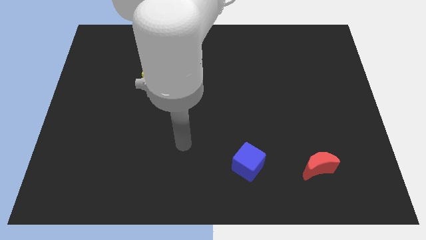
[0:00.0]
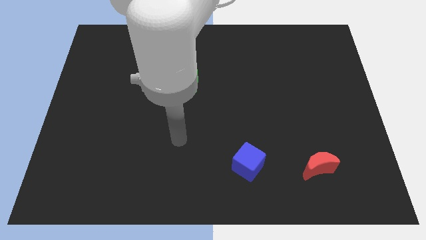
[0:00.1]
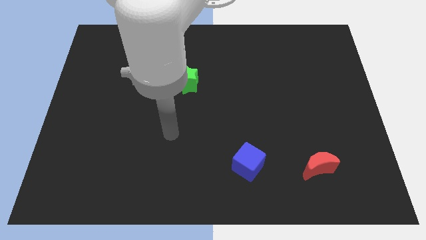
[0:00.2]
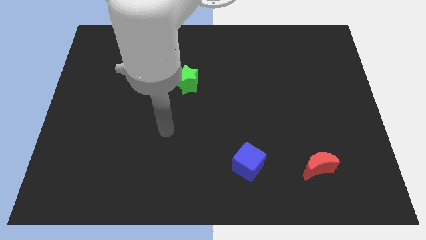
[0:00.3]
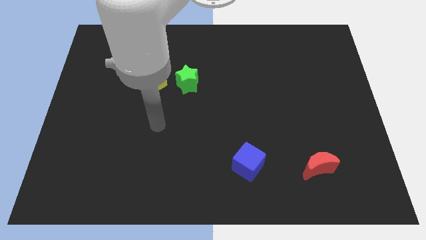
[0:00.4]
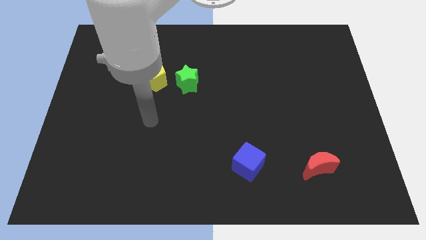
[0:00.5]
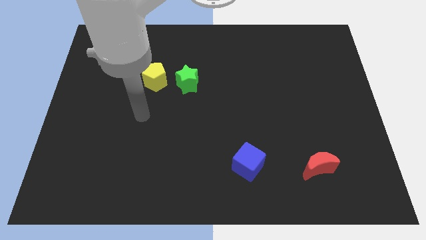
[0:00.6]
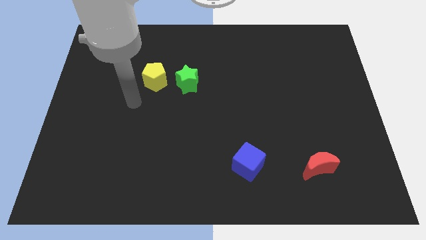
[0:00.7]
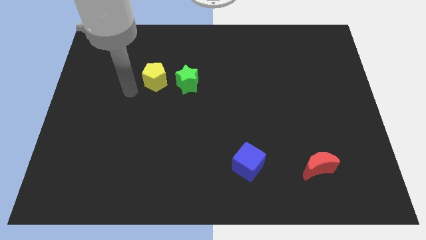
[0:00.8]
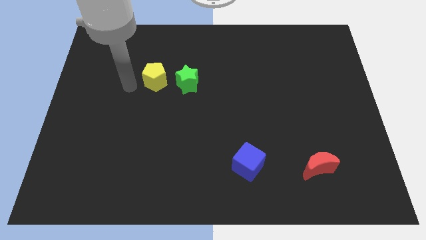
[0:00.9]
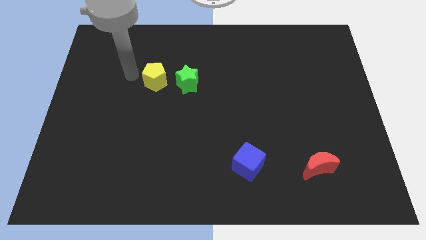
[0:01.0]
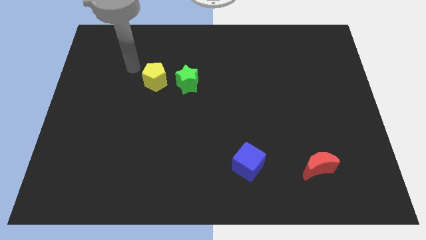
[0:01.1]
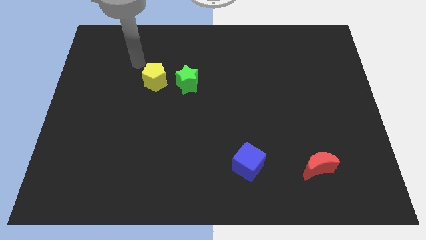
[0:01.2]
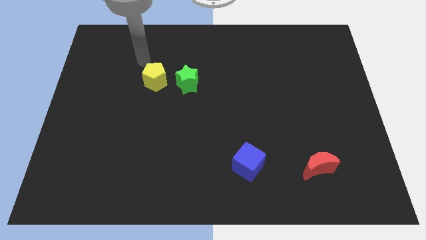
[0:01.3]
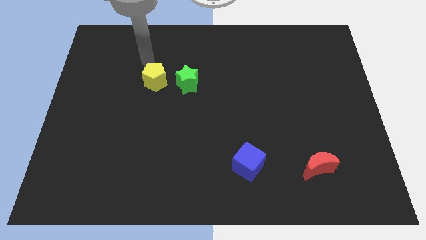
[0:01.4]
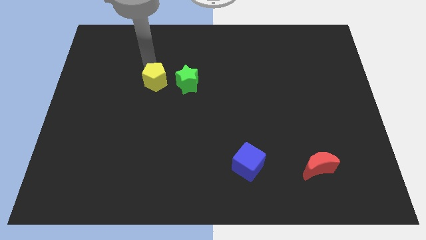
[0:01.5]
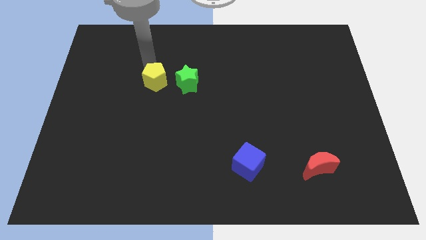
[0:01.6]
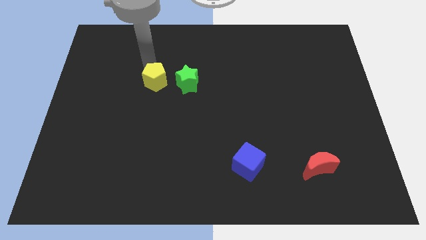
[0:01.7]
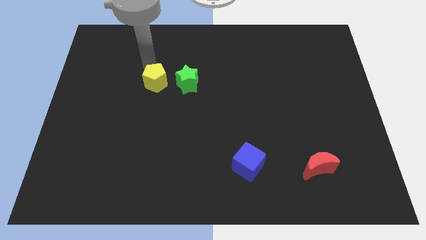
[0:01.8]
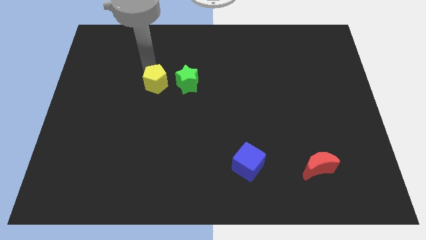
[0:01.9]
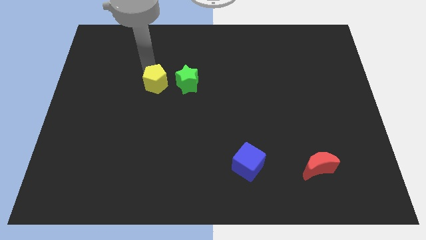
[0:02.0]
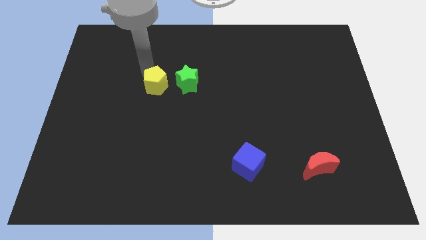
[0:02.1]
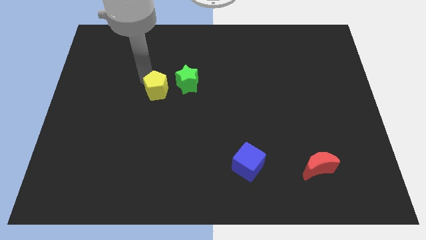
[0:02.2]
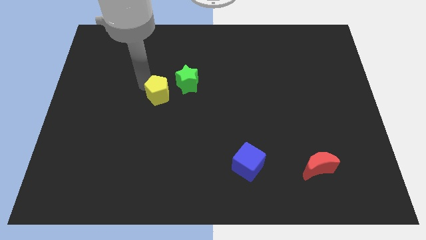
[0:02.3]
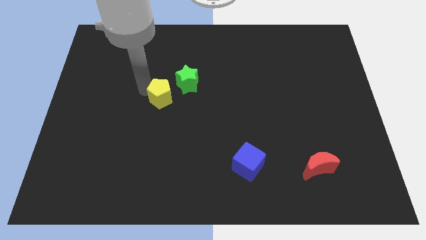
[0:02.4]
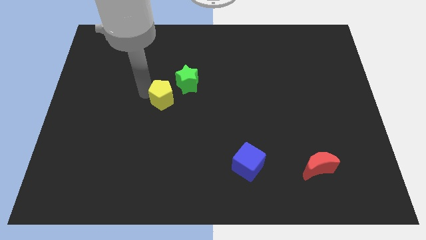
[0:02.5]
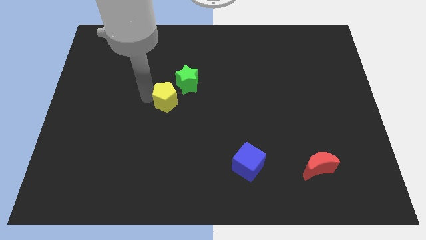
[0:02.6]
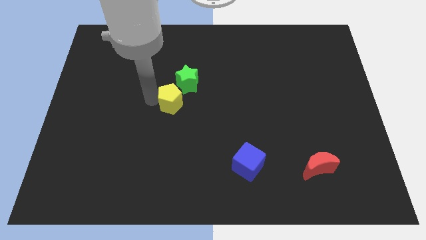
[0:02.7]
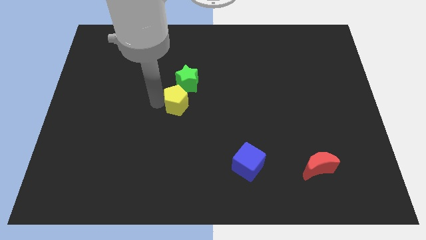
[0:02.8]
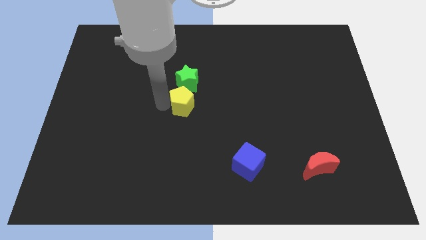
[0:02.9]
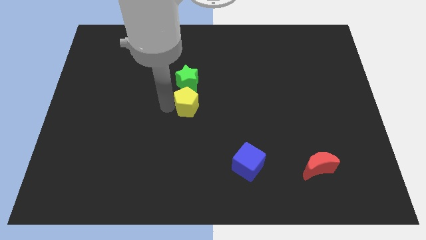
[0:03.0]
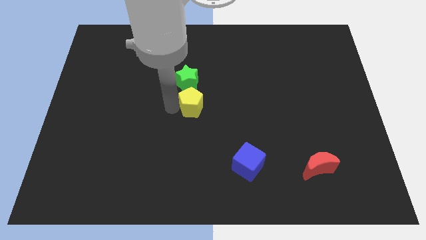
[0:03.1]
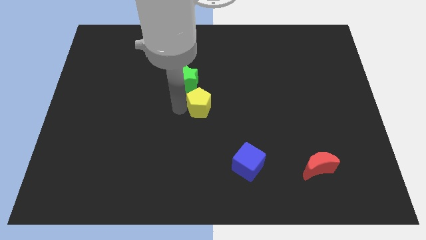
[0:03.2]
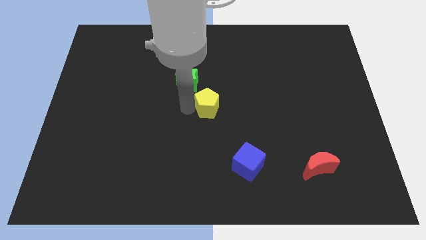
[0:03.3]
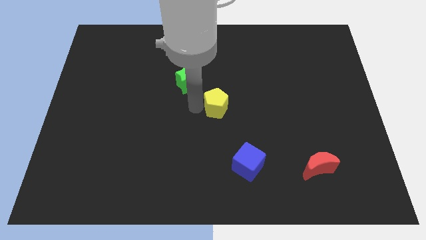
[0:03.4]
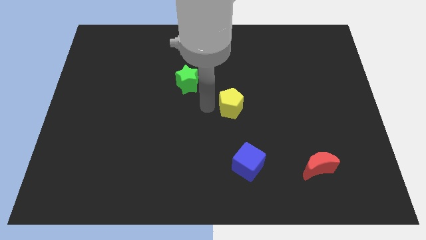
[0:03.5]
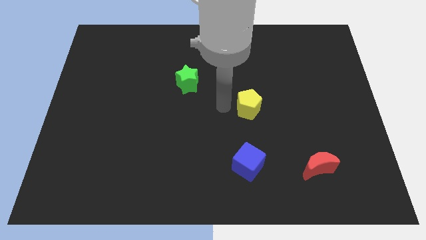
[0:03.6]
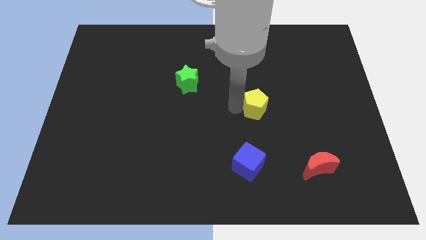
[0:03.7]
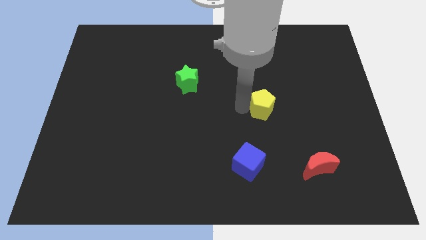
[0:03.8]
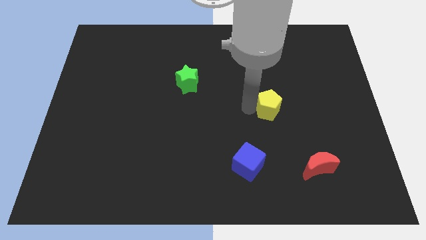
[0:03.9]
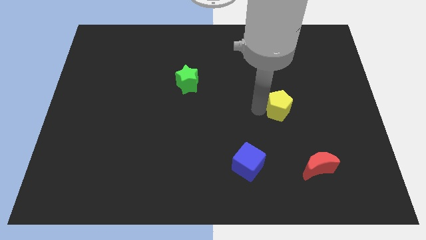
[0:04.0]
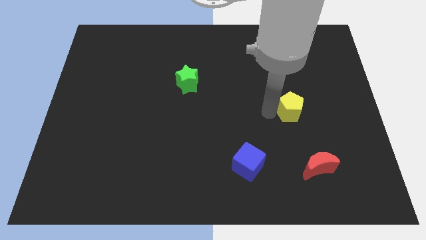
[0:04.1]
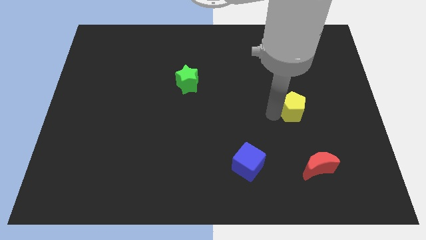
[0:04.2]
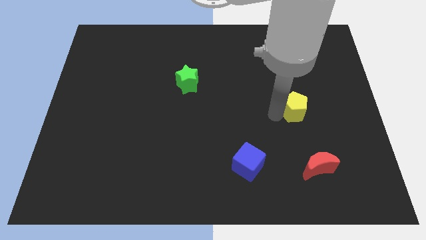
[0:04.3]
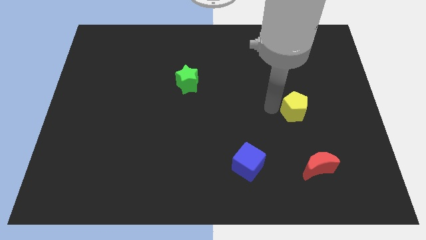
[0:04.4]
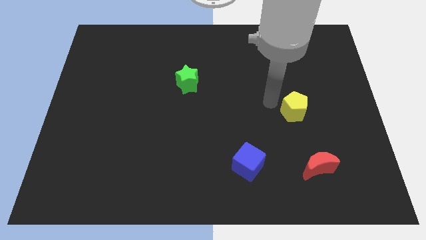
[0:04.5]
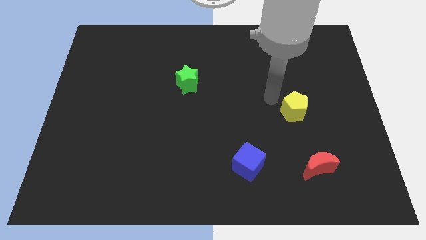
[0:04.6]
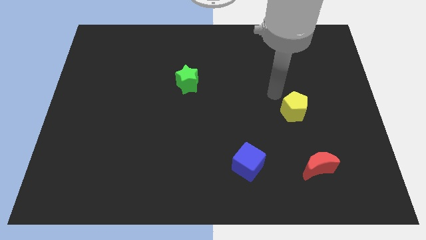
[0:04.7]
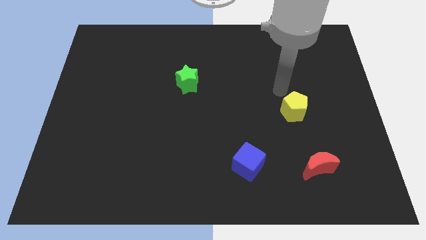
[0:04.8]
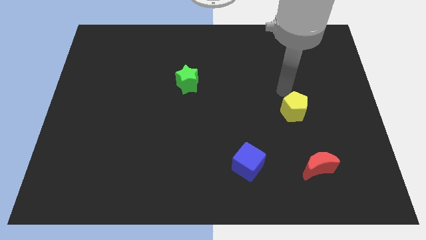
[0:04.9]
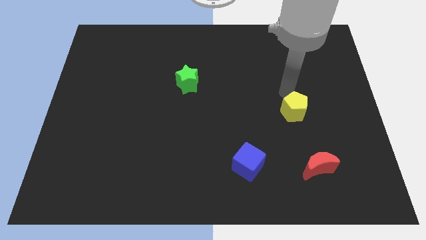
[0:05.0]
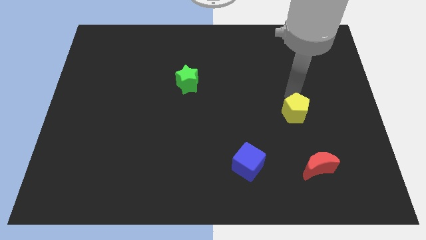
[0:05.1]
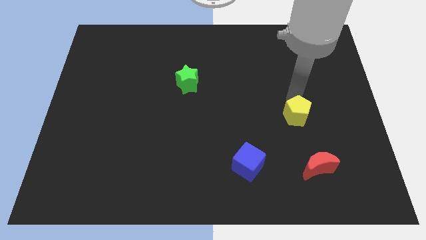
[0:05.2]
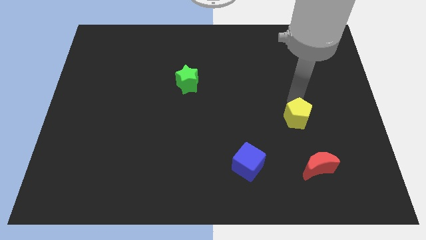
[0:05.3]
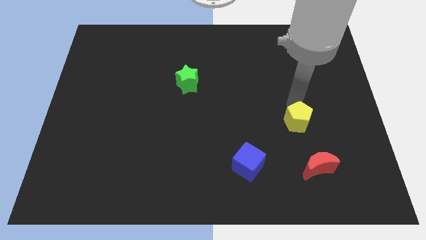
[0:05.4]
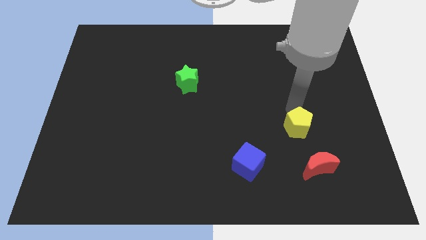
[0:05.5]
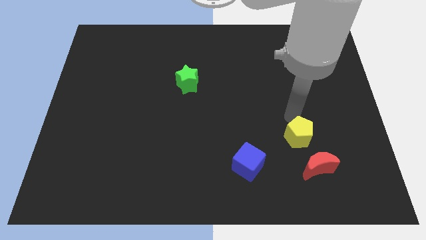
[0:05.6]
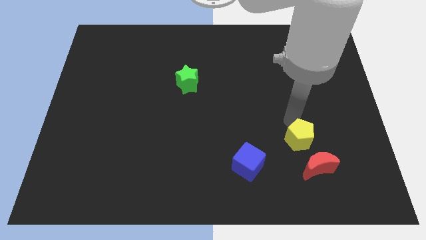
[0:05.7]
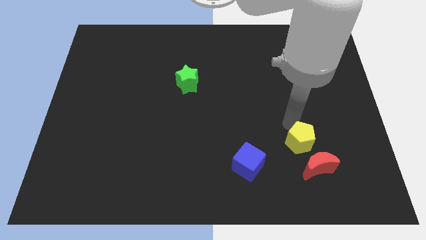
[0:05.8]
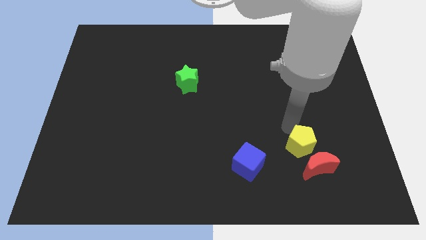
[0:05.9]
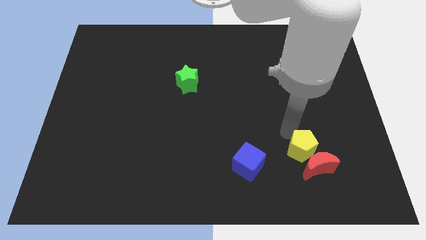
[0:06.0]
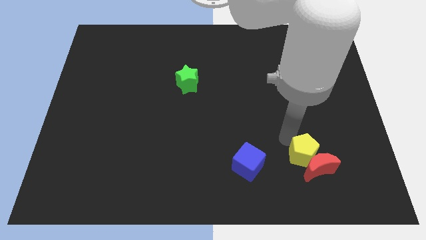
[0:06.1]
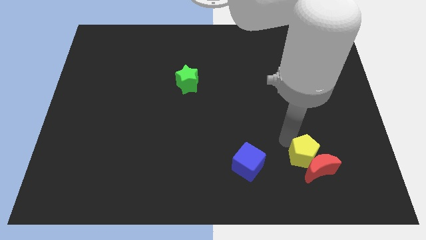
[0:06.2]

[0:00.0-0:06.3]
push the yellow pentagon to the red moon

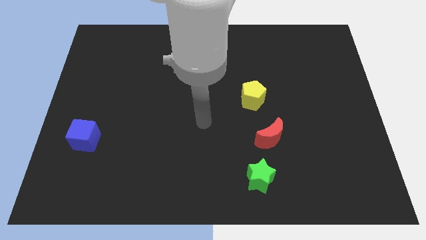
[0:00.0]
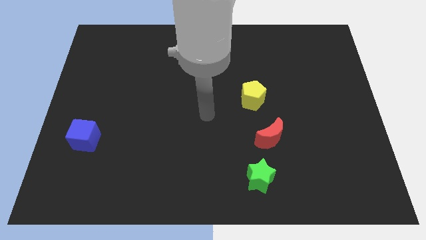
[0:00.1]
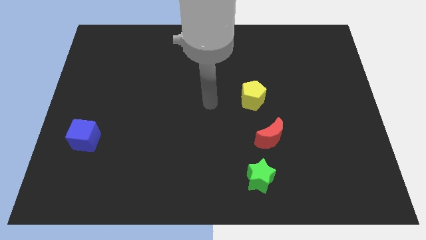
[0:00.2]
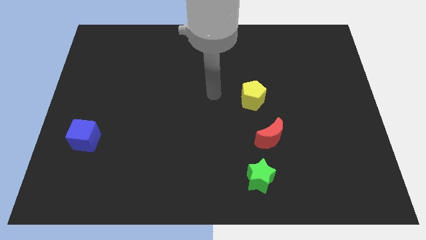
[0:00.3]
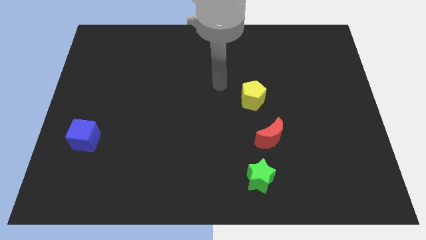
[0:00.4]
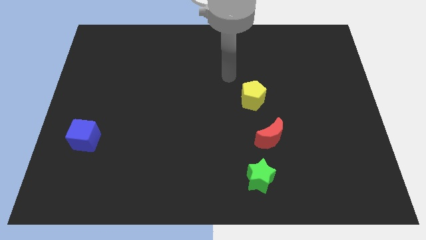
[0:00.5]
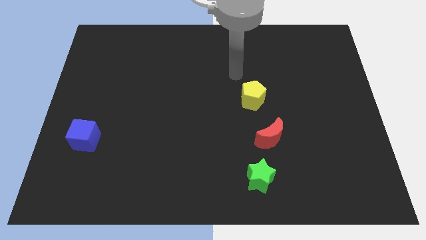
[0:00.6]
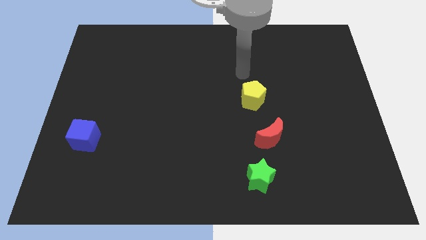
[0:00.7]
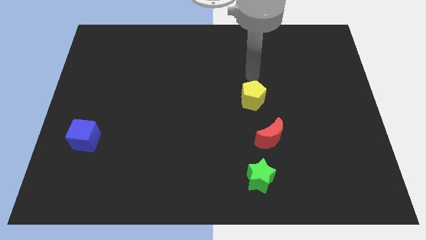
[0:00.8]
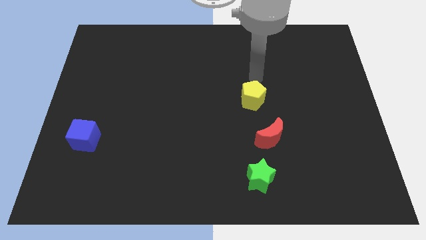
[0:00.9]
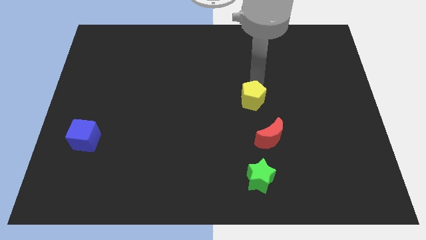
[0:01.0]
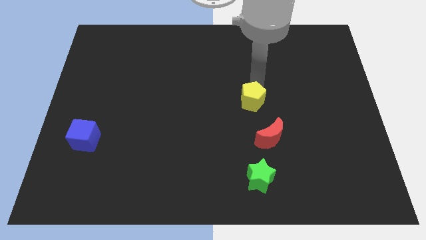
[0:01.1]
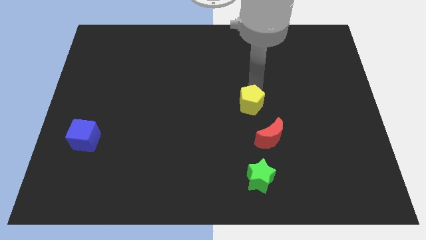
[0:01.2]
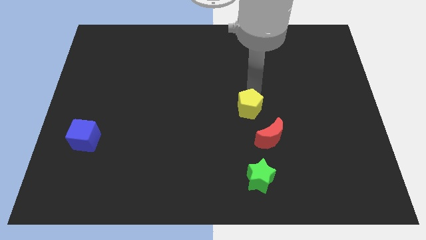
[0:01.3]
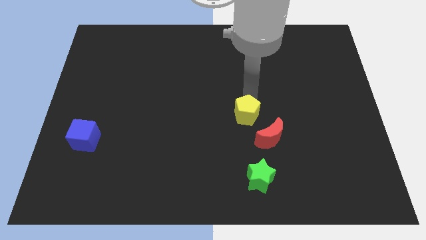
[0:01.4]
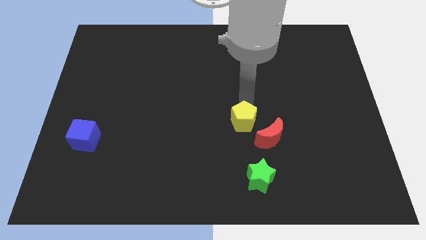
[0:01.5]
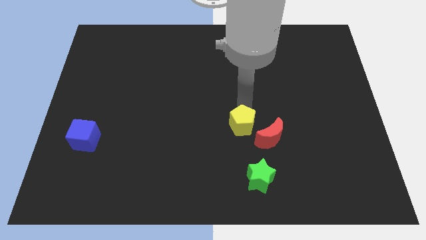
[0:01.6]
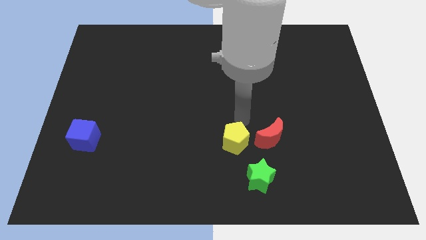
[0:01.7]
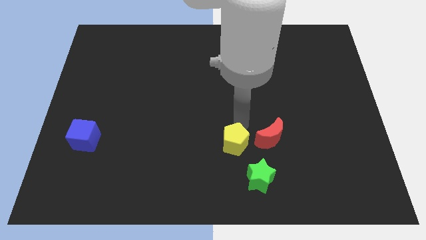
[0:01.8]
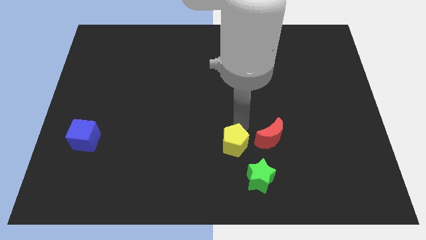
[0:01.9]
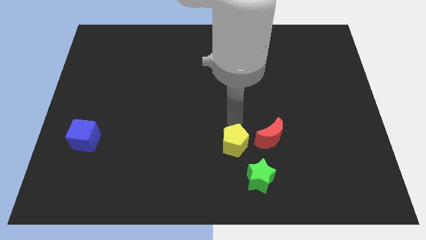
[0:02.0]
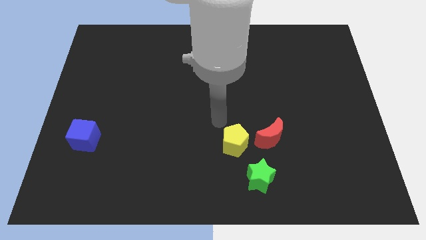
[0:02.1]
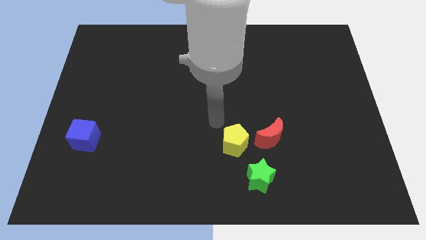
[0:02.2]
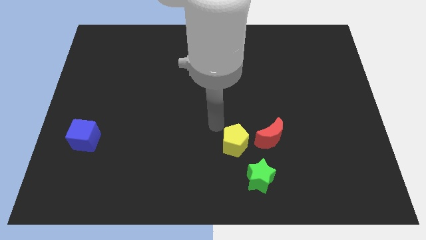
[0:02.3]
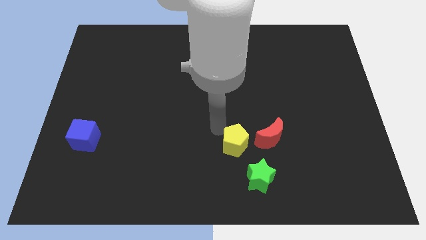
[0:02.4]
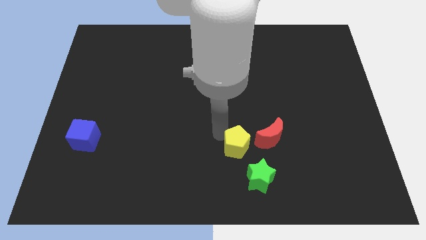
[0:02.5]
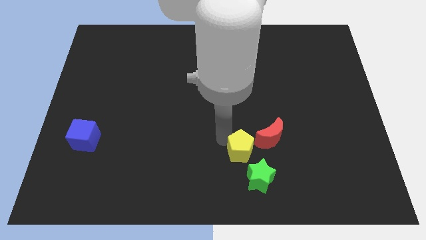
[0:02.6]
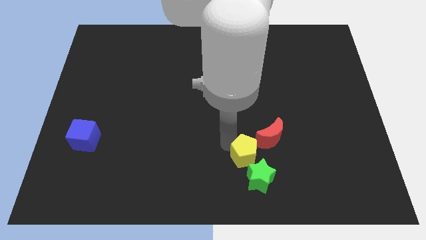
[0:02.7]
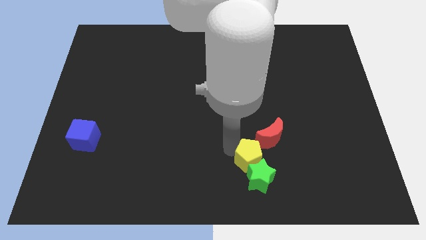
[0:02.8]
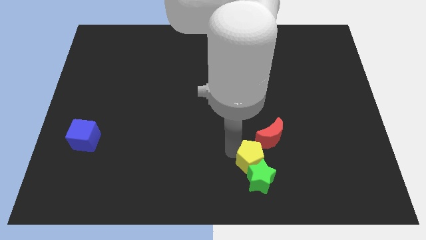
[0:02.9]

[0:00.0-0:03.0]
push the pentagon towards the green block
